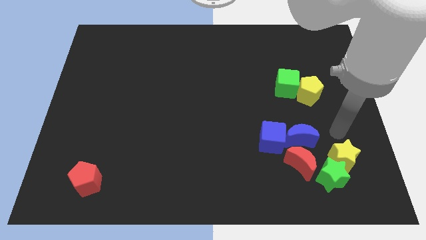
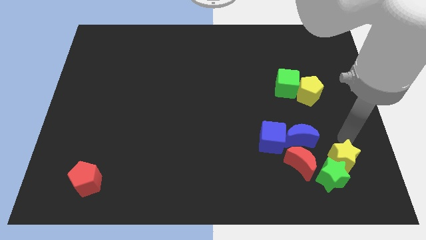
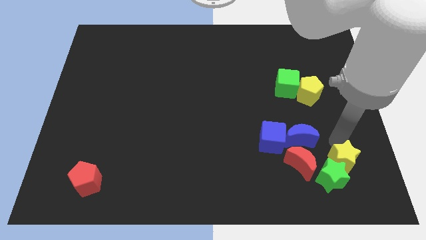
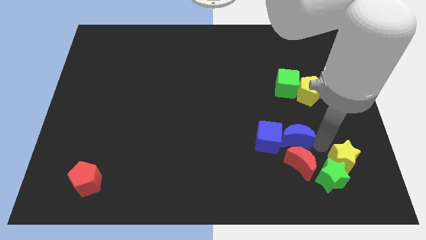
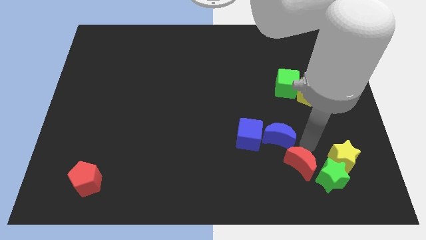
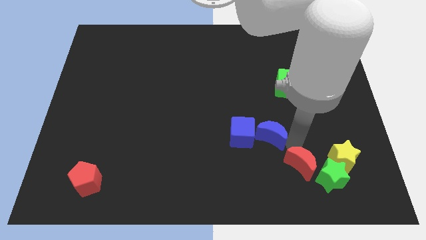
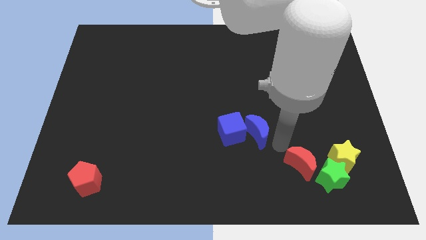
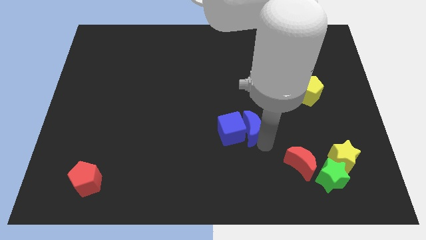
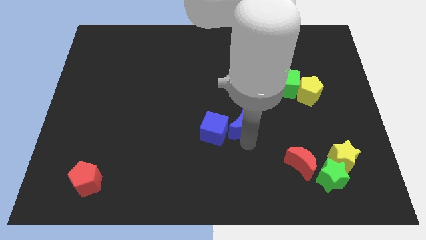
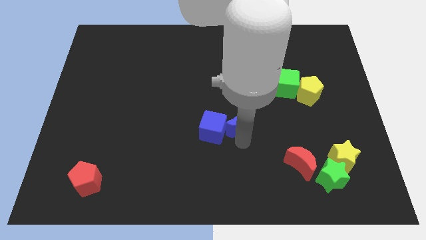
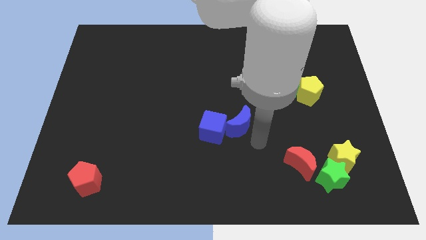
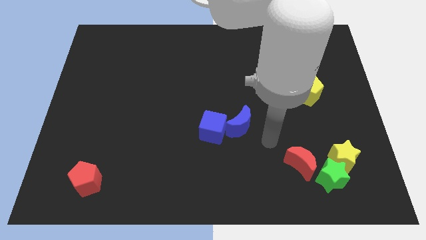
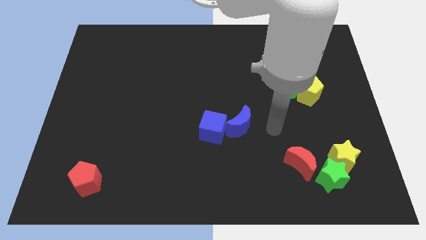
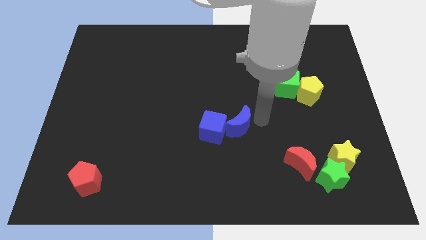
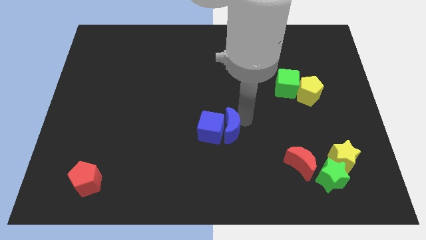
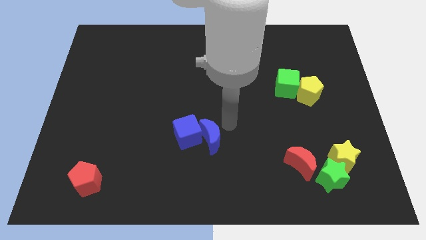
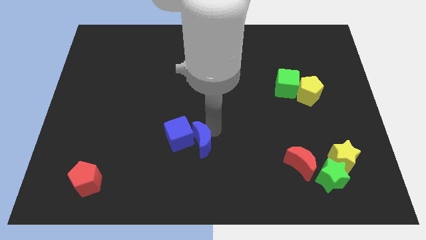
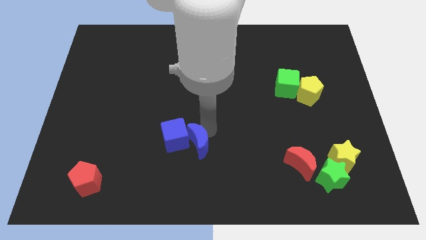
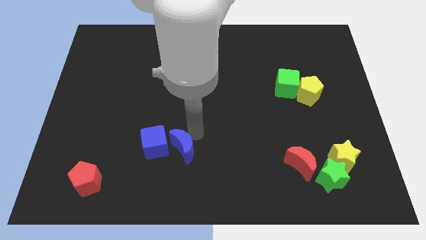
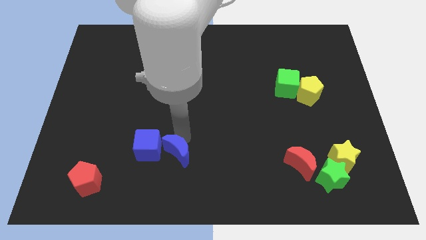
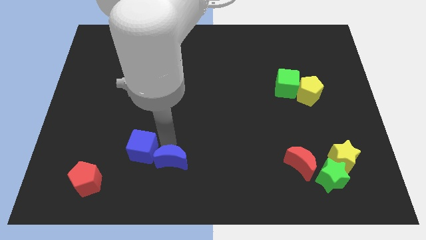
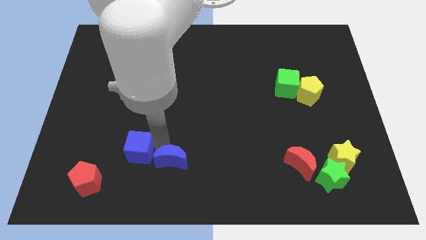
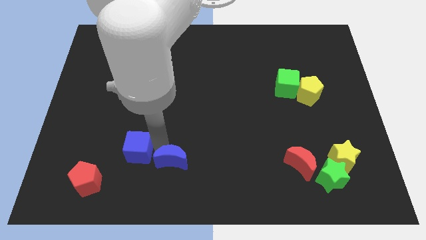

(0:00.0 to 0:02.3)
push the blue moon and blue cube towards left

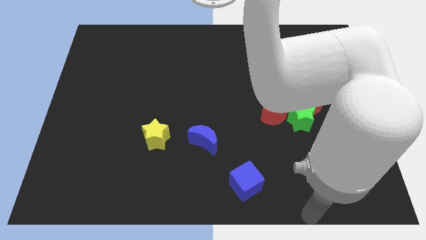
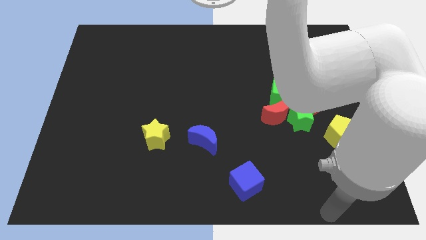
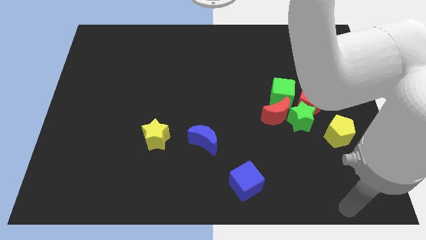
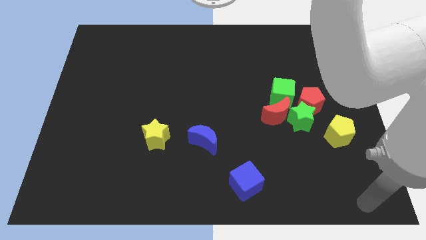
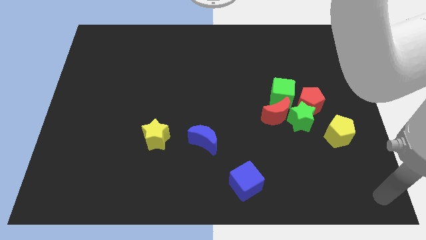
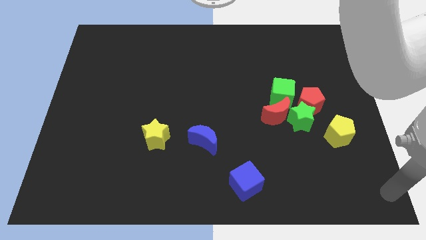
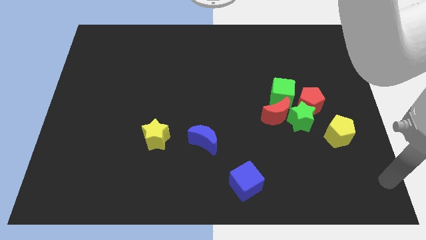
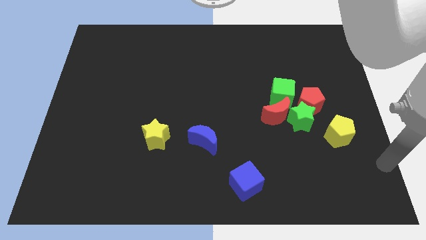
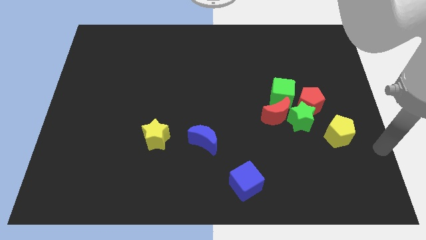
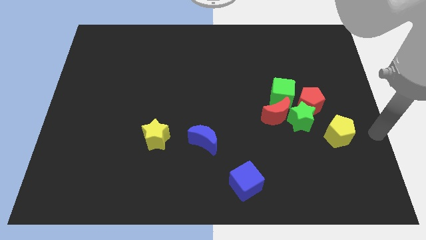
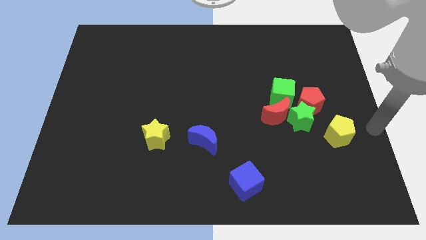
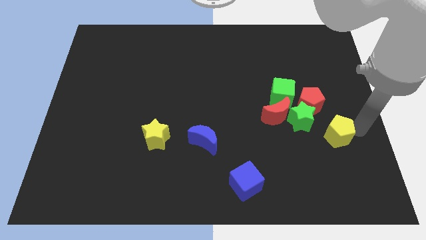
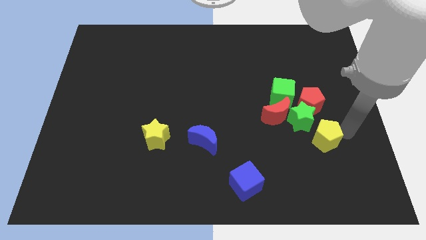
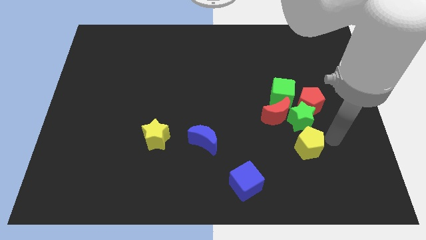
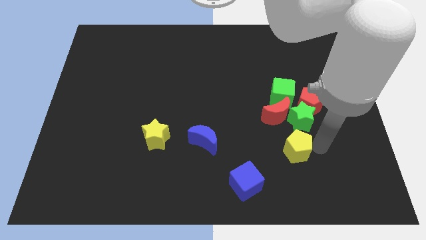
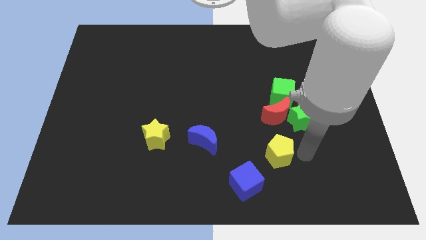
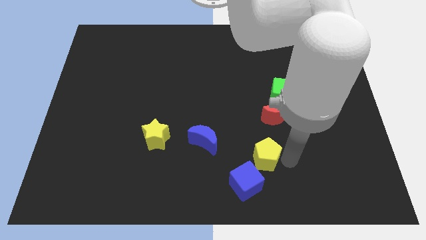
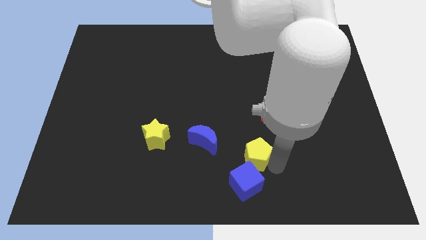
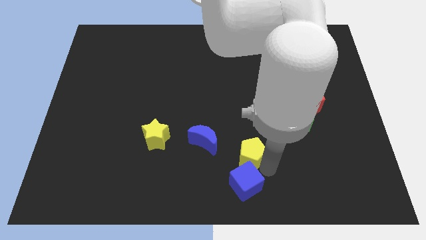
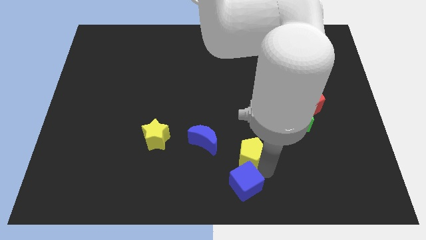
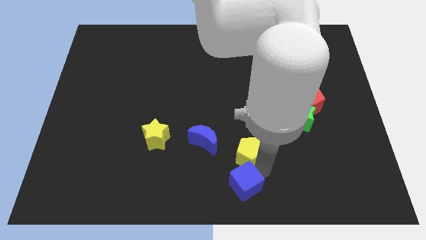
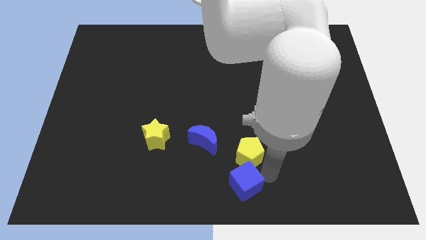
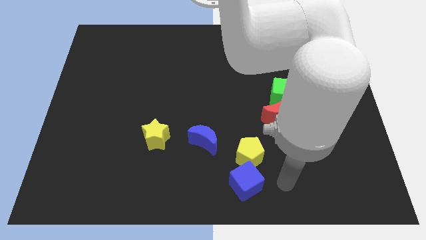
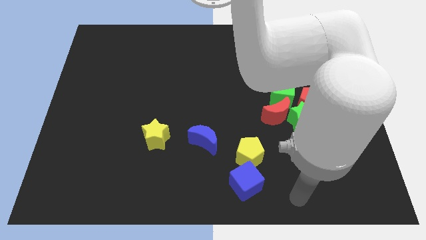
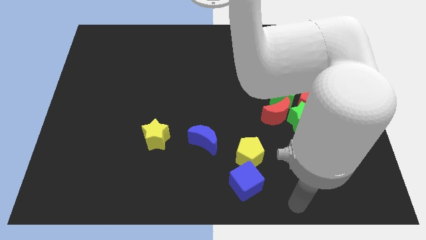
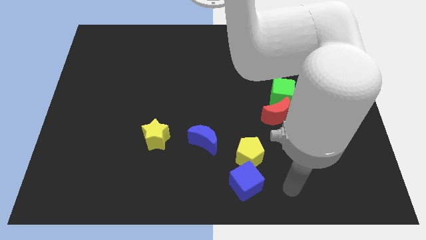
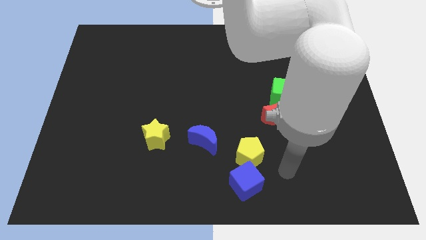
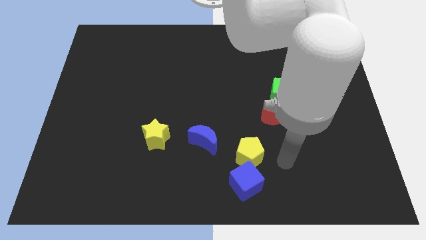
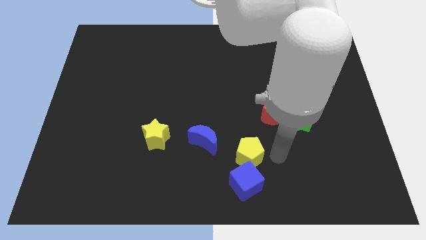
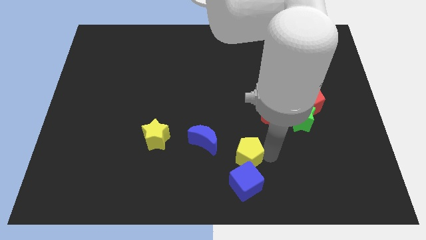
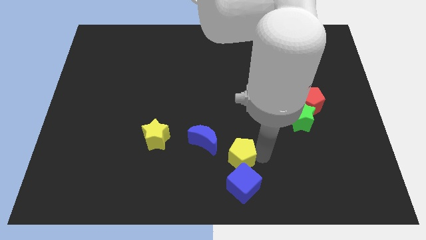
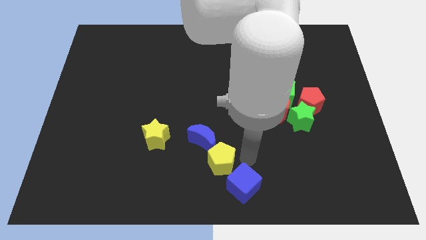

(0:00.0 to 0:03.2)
place the yellow pentagon in between the blue moon and the blue cube

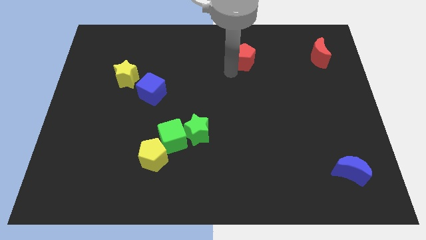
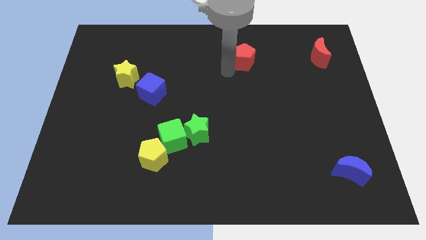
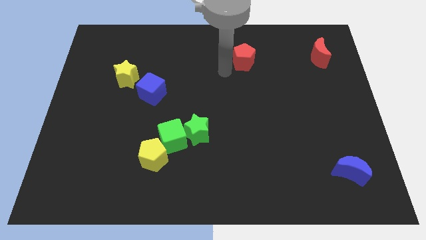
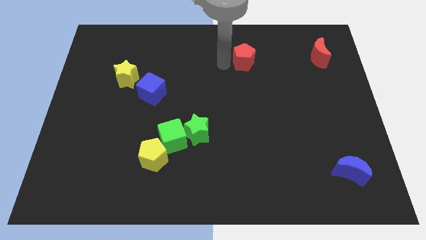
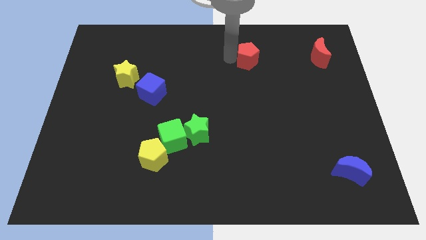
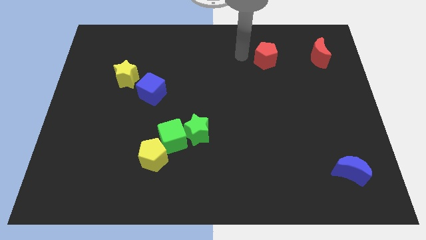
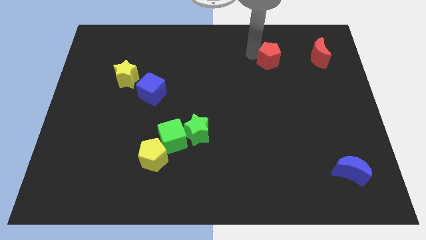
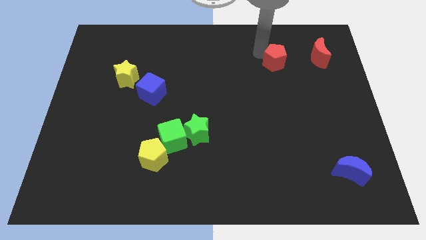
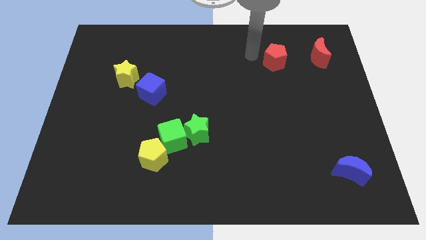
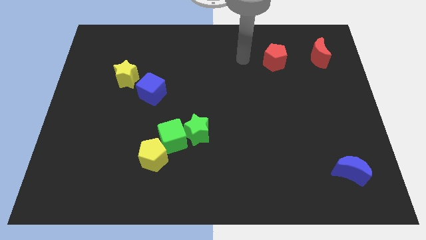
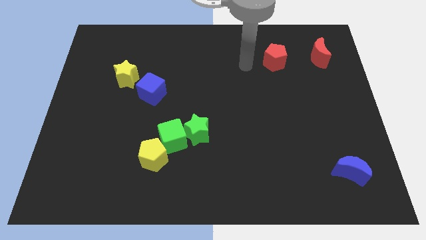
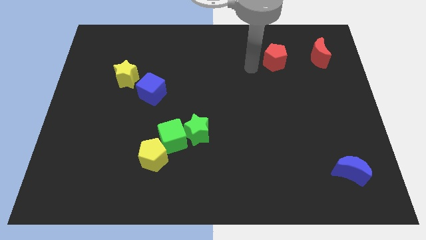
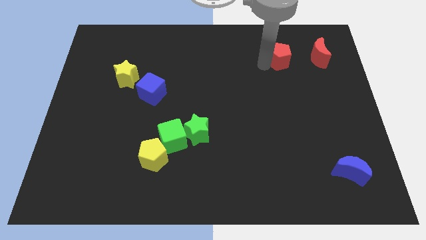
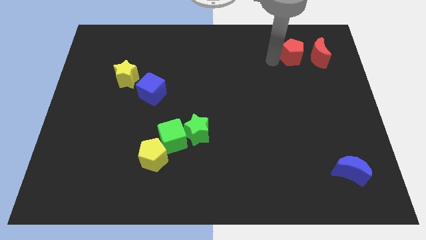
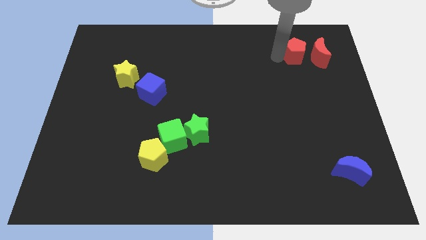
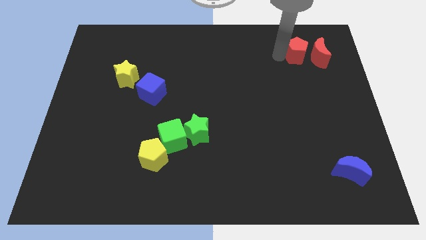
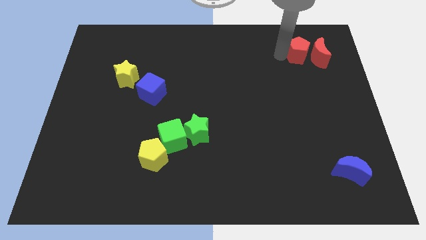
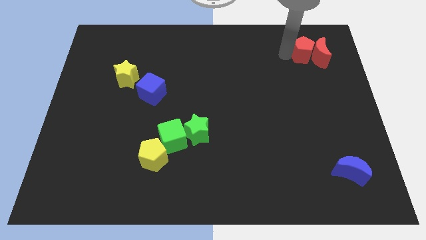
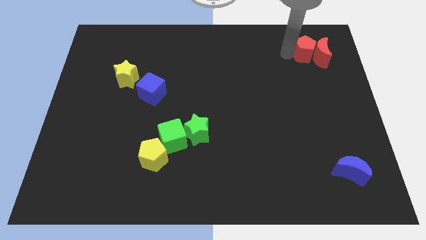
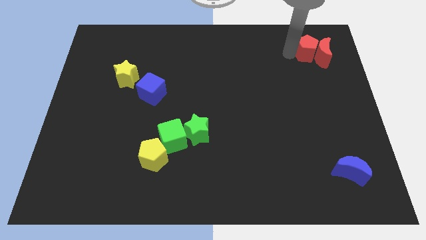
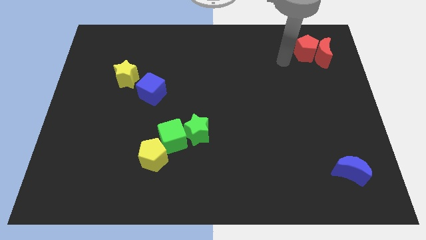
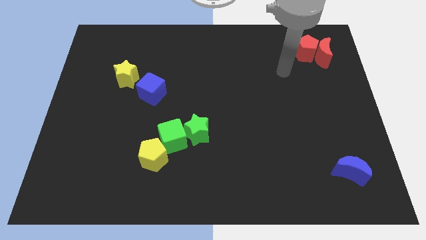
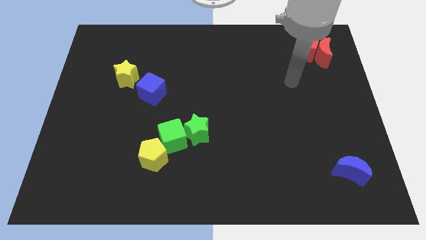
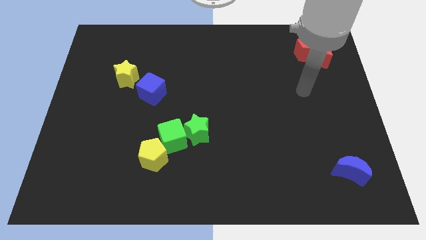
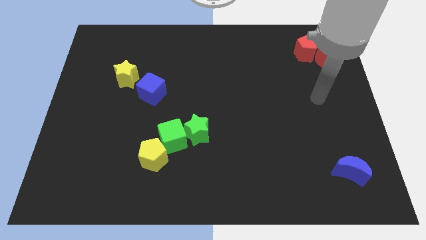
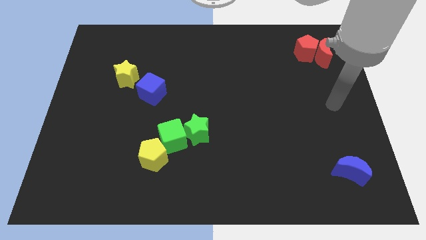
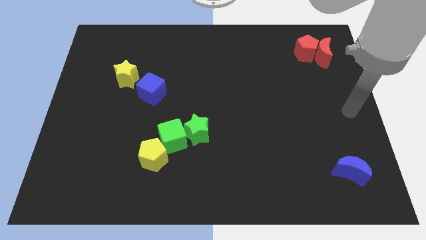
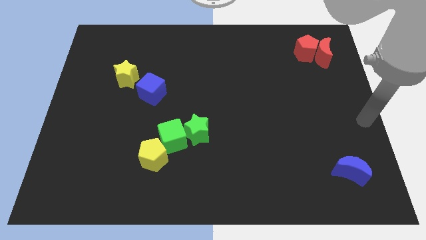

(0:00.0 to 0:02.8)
push the red pentagon into the red moon

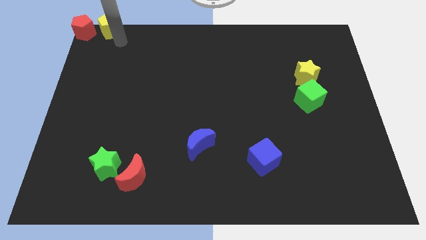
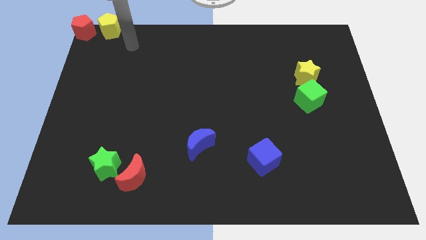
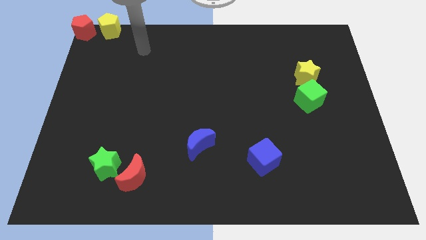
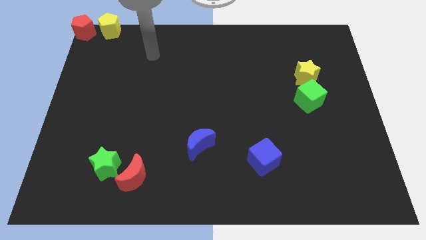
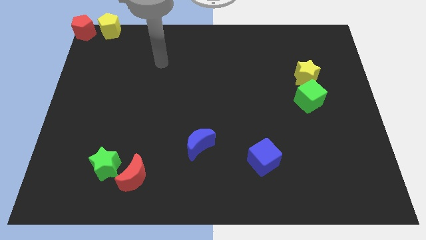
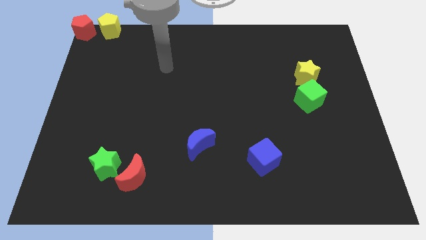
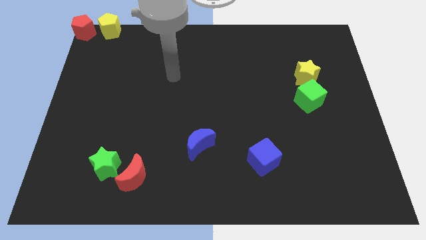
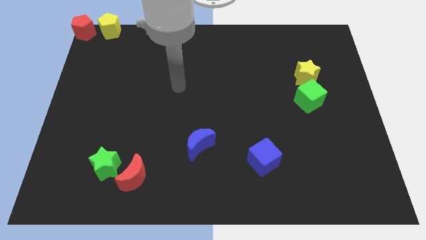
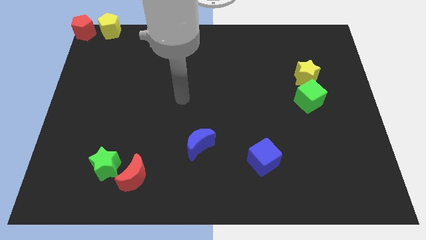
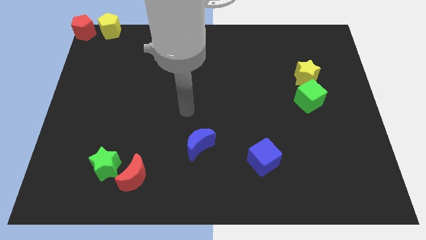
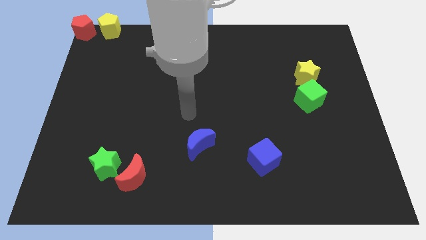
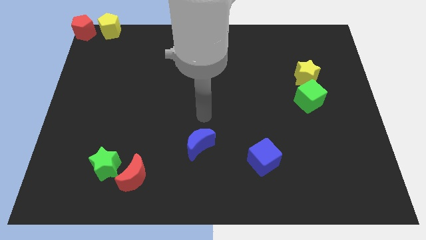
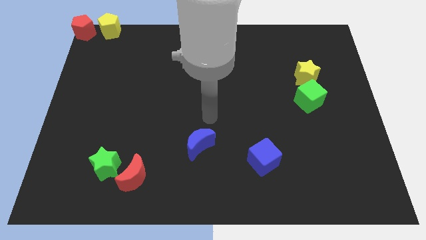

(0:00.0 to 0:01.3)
point your arm at the top of the blue crescent
